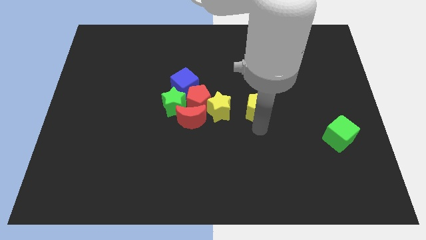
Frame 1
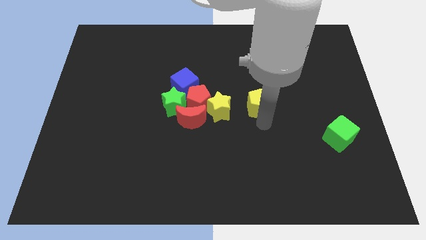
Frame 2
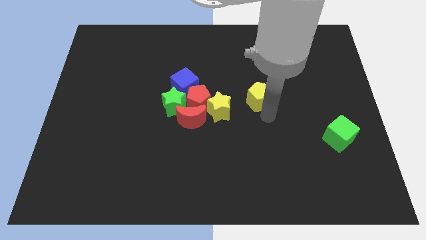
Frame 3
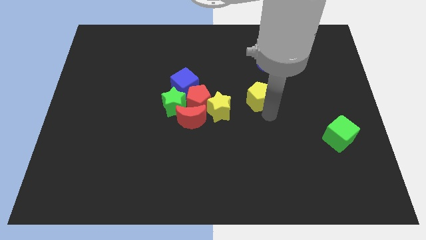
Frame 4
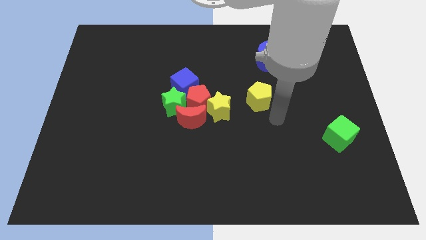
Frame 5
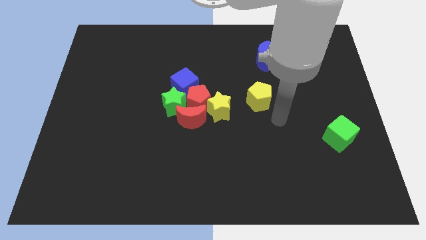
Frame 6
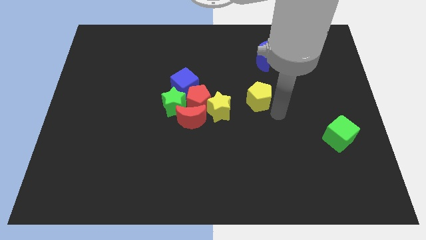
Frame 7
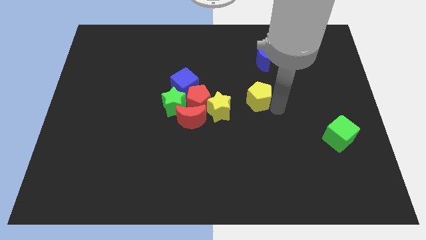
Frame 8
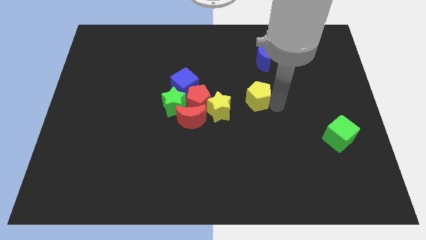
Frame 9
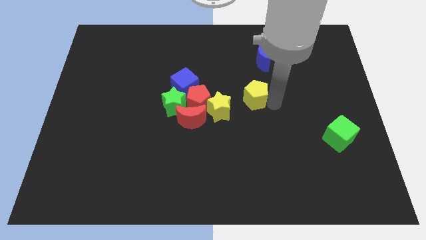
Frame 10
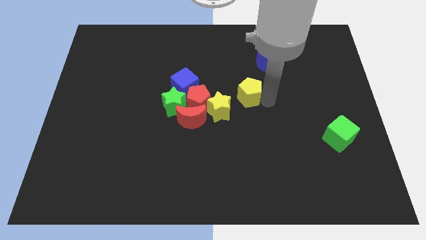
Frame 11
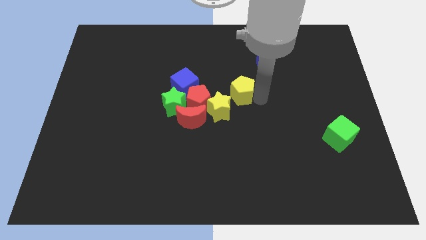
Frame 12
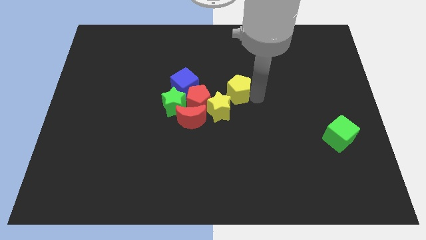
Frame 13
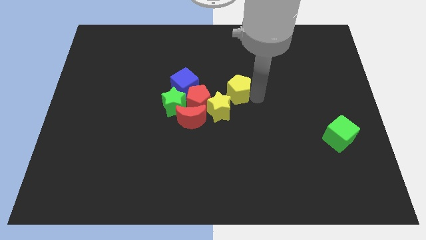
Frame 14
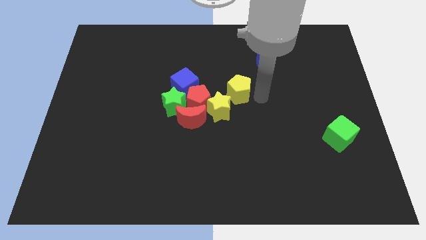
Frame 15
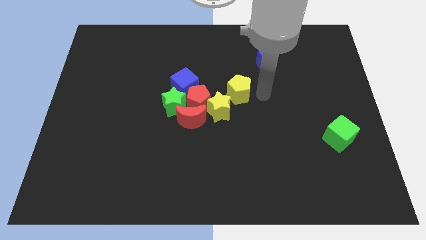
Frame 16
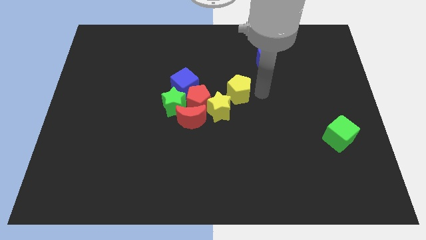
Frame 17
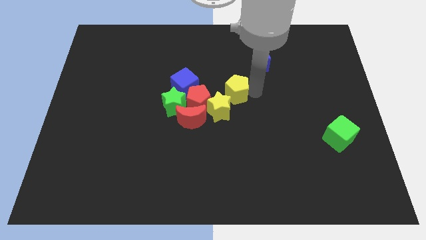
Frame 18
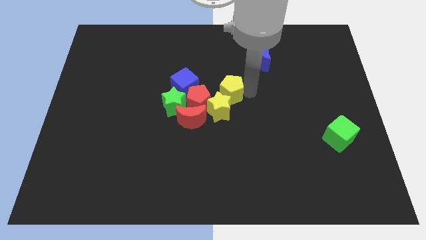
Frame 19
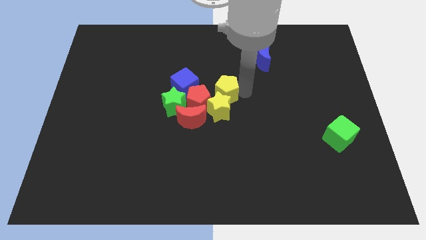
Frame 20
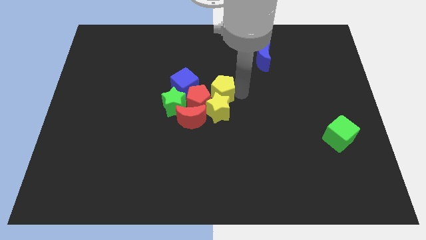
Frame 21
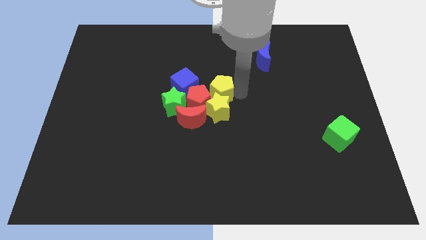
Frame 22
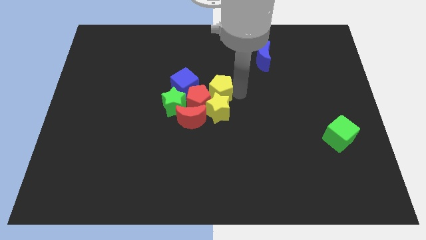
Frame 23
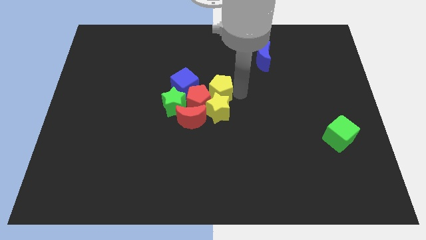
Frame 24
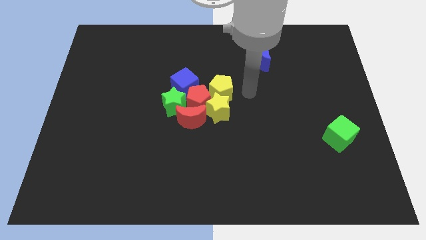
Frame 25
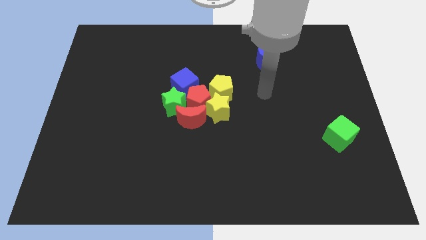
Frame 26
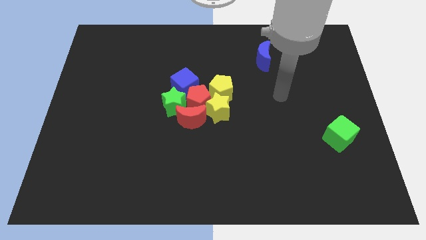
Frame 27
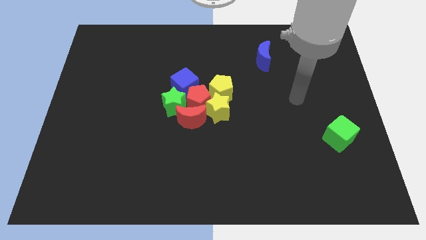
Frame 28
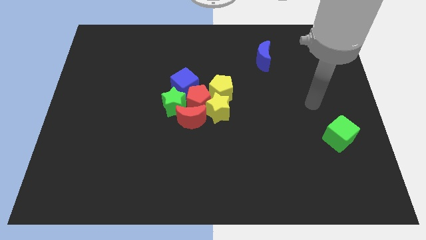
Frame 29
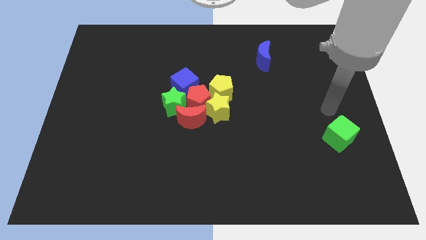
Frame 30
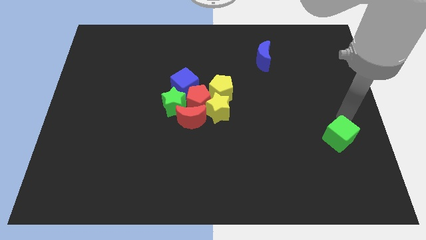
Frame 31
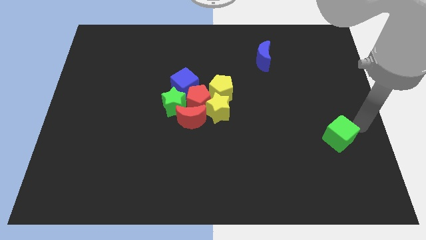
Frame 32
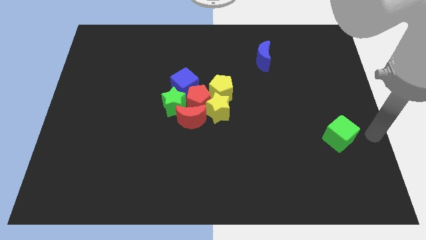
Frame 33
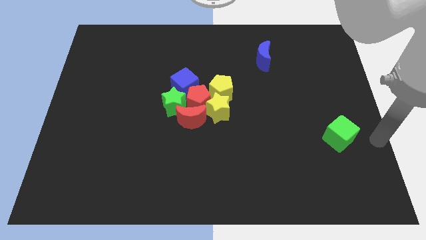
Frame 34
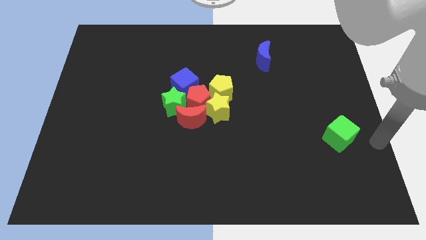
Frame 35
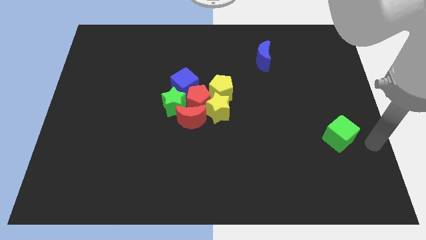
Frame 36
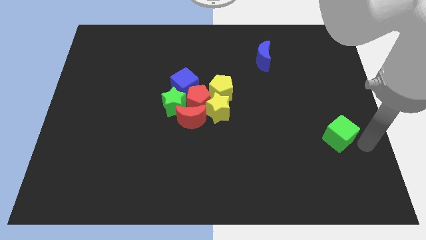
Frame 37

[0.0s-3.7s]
put the yellow pentagon to the top side of the yellow star

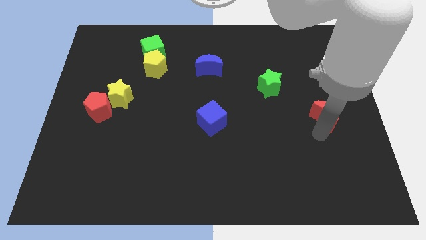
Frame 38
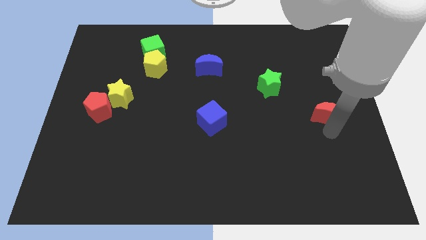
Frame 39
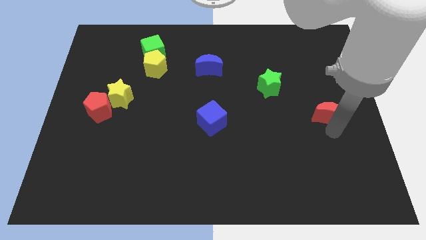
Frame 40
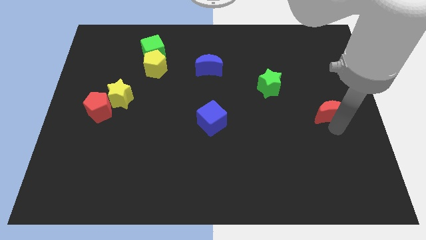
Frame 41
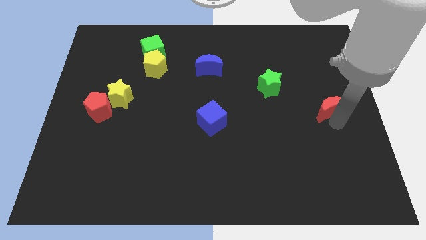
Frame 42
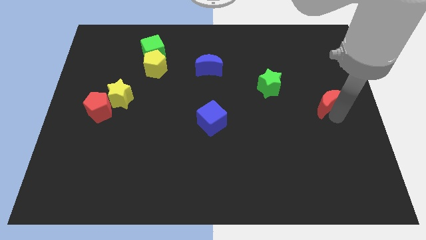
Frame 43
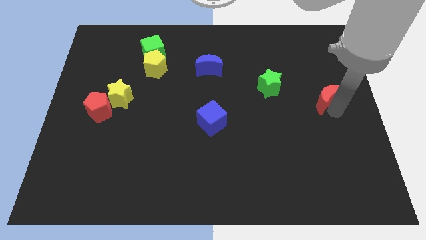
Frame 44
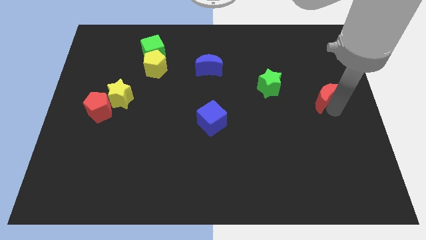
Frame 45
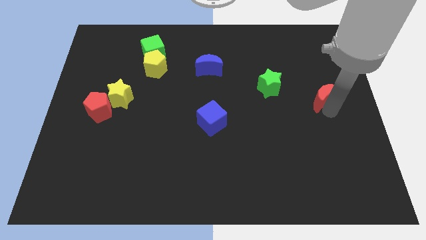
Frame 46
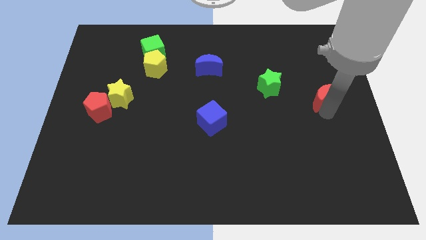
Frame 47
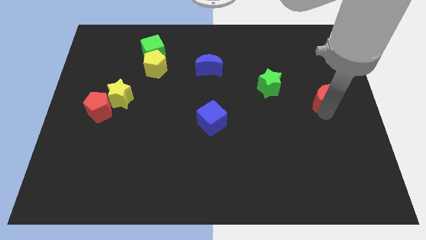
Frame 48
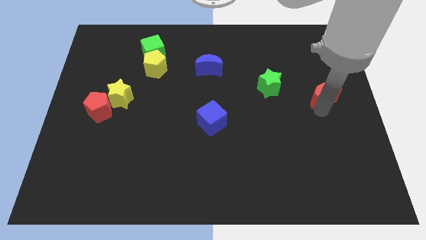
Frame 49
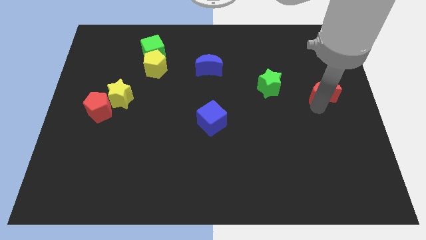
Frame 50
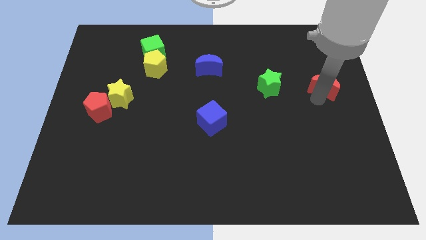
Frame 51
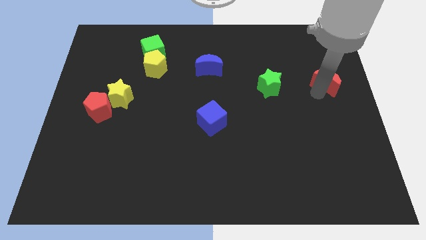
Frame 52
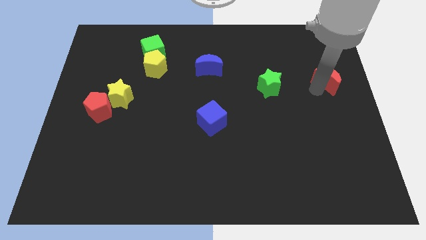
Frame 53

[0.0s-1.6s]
push the red crescent slightly upwards

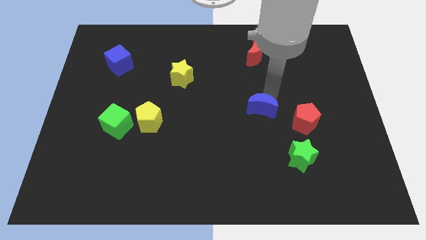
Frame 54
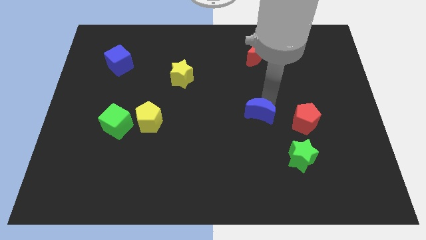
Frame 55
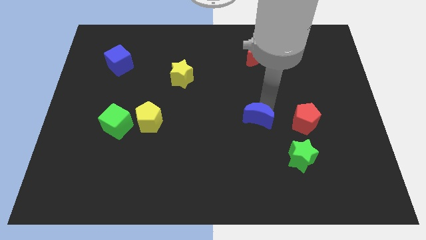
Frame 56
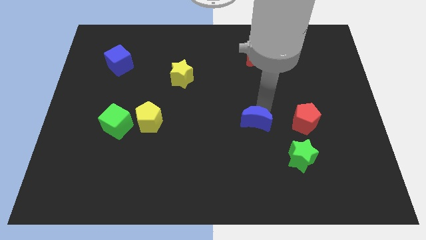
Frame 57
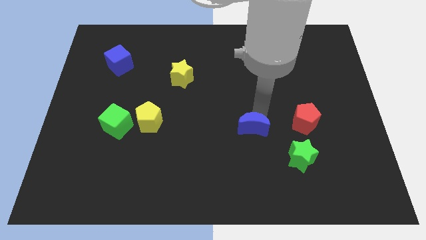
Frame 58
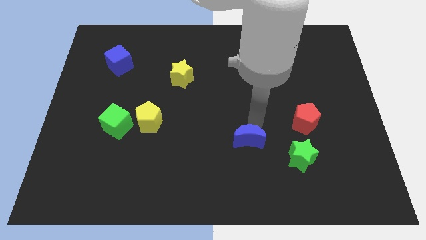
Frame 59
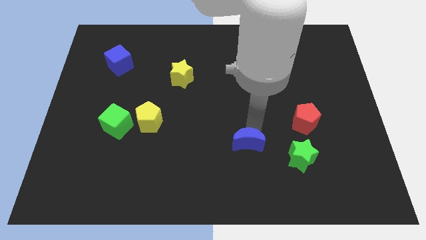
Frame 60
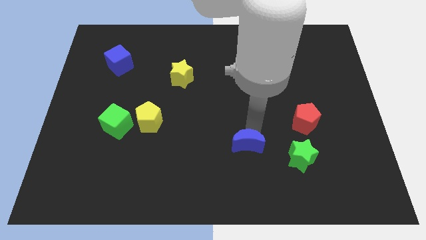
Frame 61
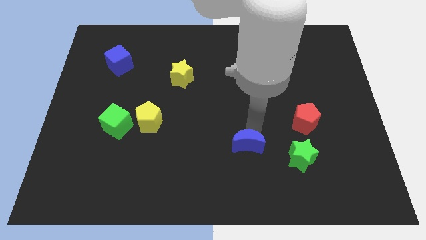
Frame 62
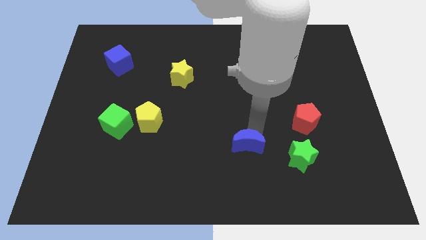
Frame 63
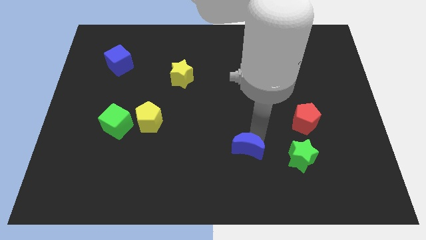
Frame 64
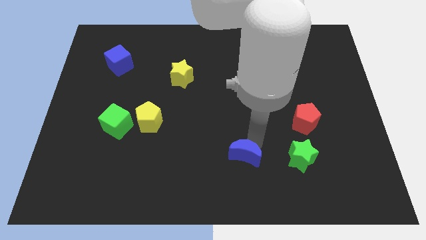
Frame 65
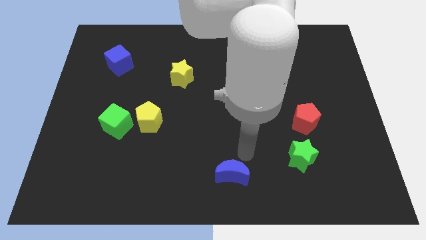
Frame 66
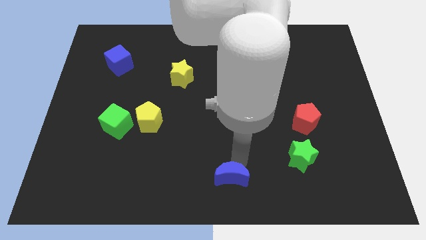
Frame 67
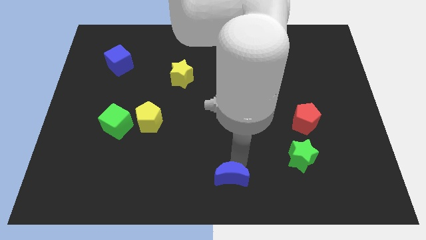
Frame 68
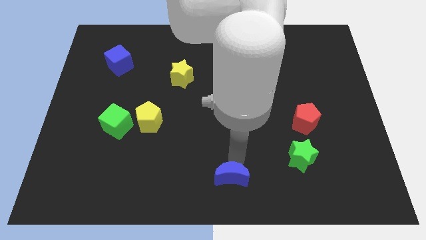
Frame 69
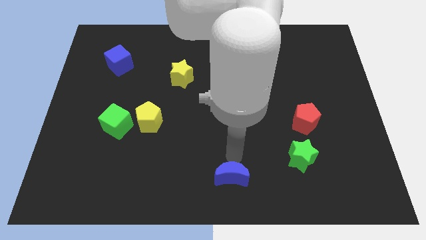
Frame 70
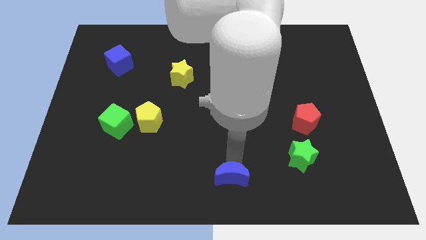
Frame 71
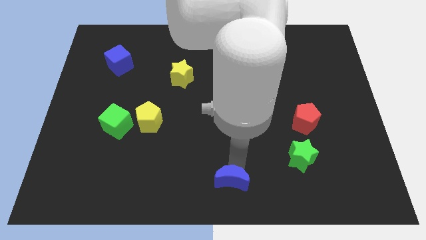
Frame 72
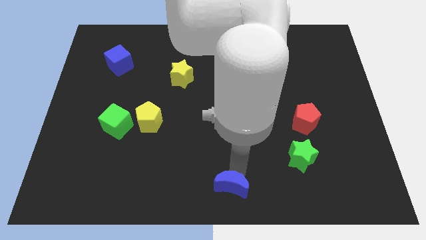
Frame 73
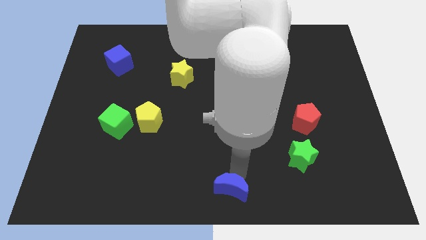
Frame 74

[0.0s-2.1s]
push blue moon towards bottom center

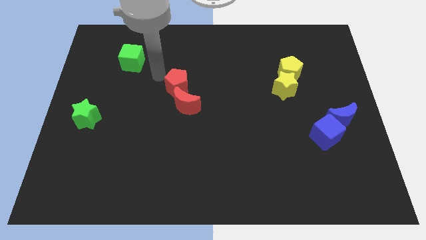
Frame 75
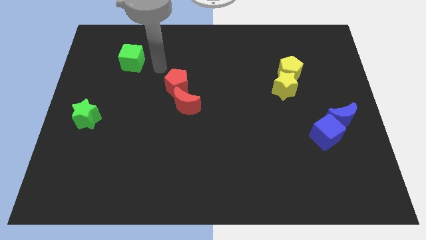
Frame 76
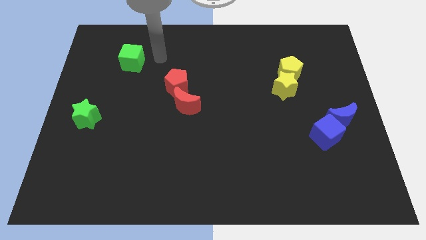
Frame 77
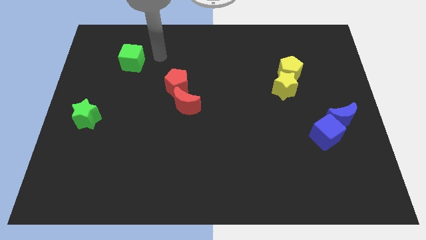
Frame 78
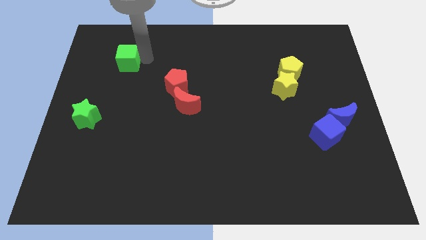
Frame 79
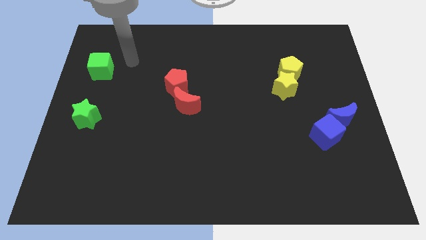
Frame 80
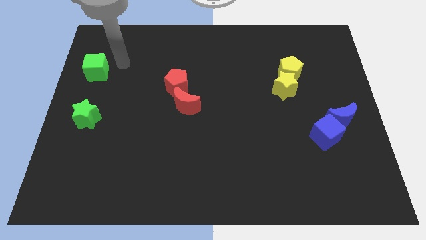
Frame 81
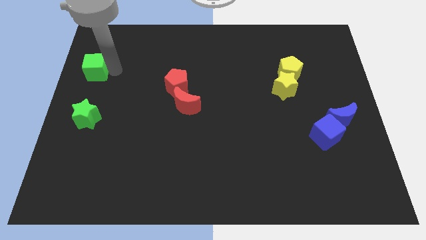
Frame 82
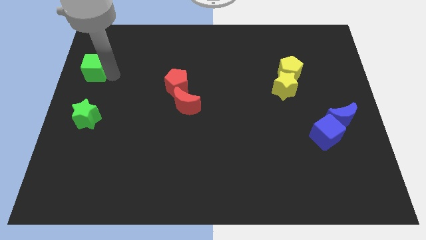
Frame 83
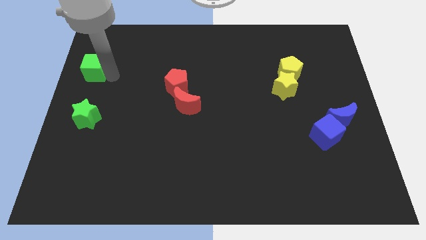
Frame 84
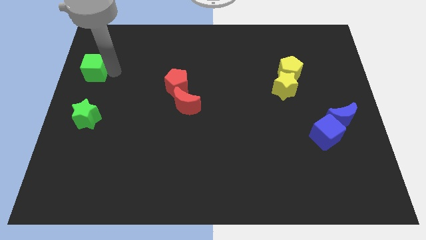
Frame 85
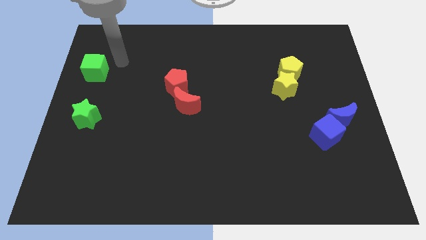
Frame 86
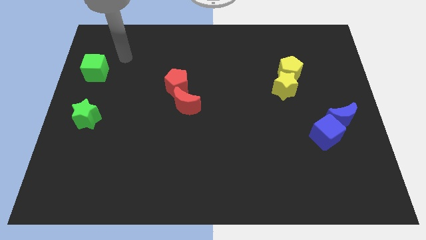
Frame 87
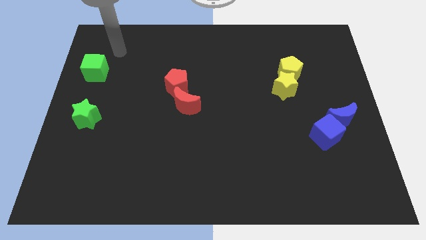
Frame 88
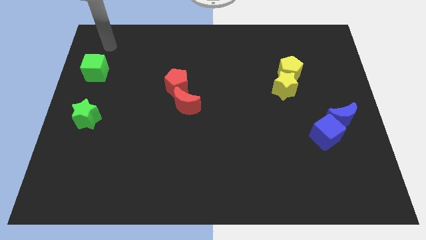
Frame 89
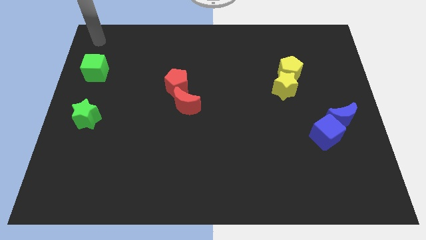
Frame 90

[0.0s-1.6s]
place the green cube above the green star

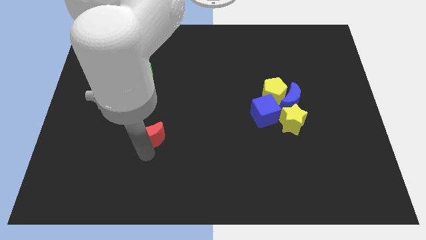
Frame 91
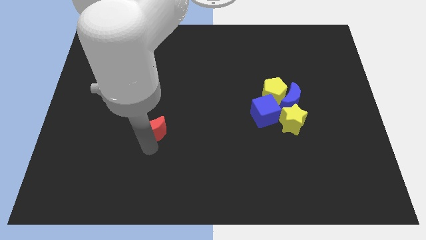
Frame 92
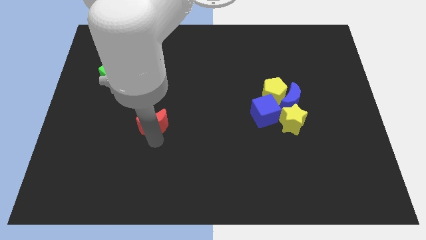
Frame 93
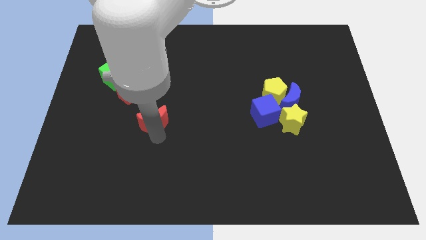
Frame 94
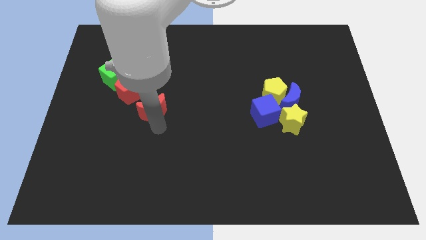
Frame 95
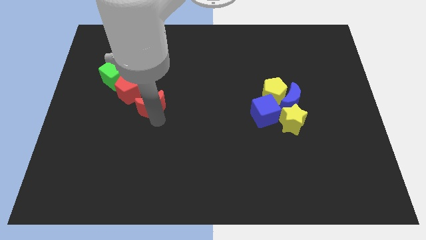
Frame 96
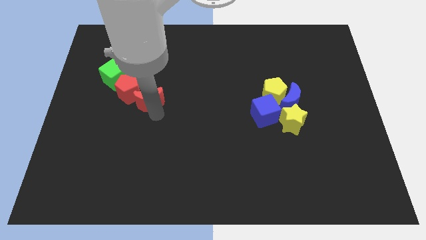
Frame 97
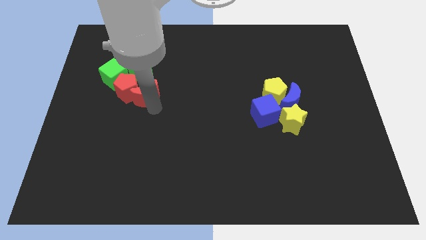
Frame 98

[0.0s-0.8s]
place the red crescent at the bottom right side of red pentagon
